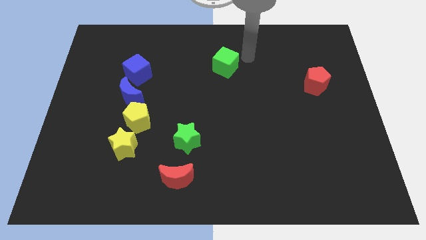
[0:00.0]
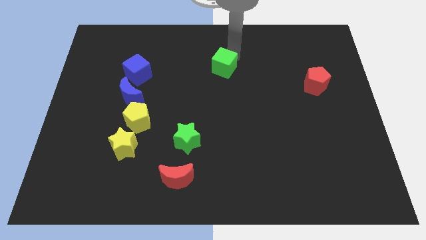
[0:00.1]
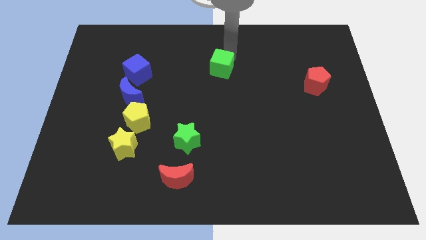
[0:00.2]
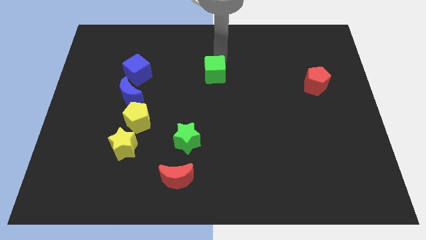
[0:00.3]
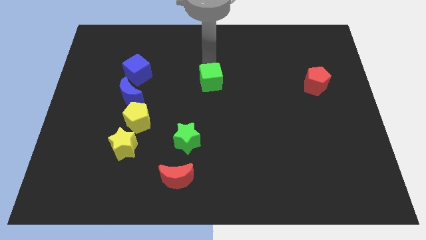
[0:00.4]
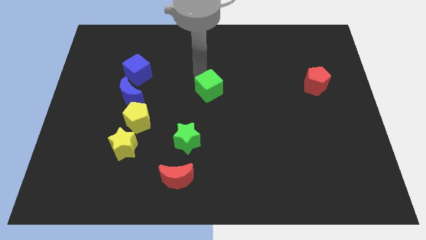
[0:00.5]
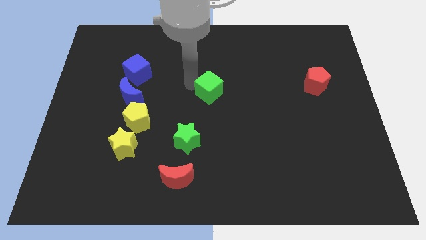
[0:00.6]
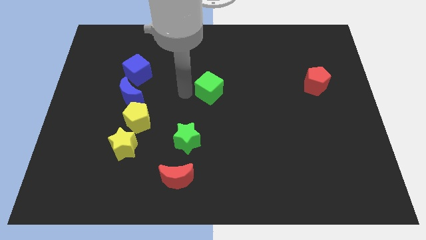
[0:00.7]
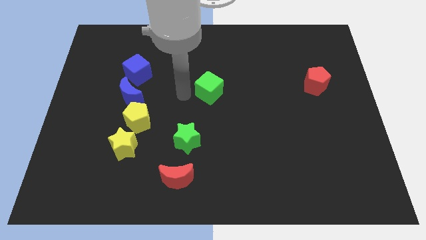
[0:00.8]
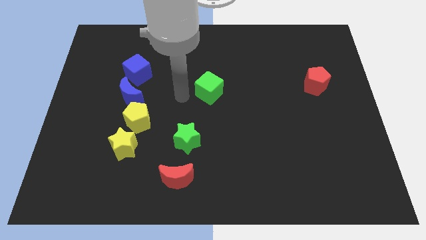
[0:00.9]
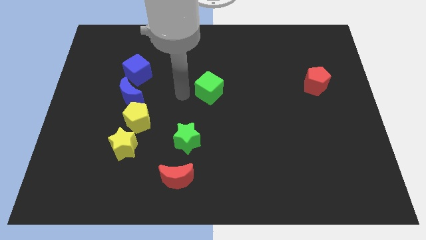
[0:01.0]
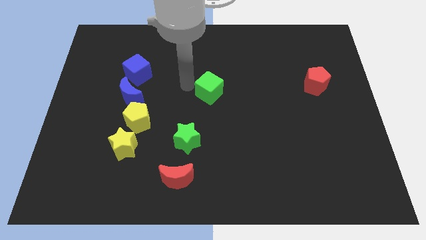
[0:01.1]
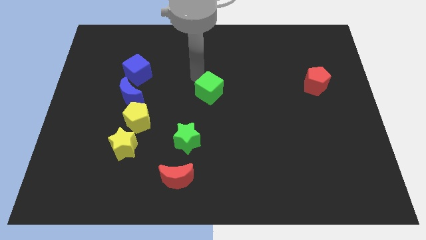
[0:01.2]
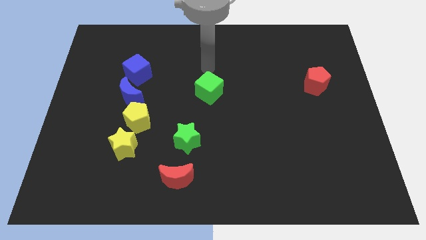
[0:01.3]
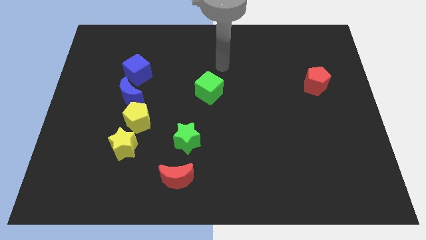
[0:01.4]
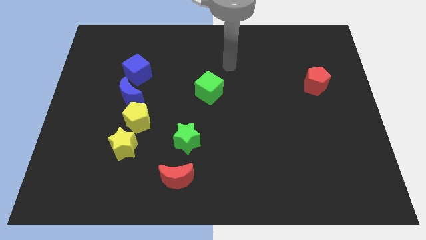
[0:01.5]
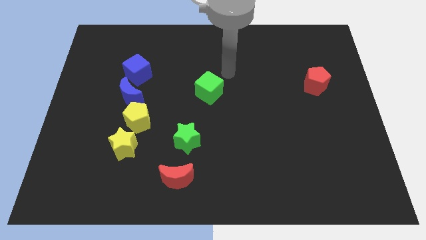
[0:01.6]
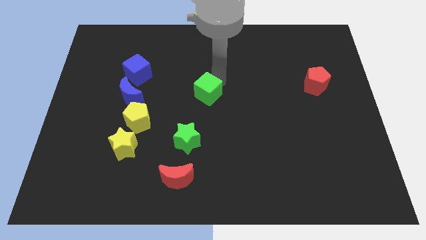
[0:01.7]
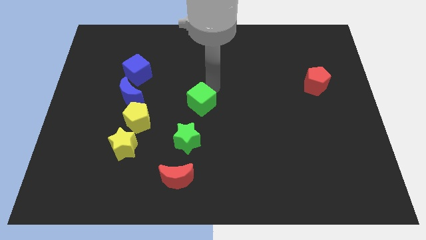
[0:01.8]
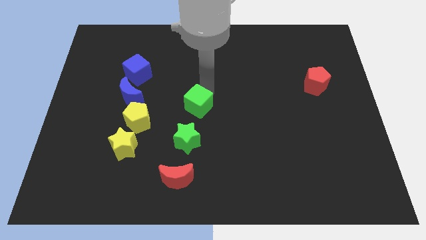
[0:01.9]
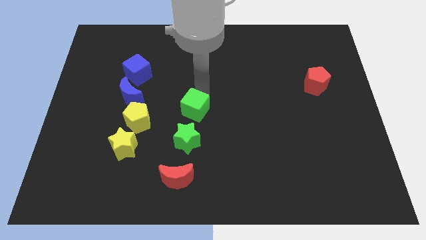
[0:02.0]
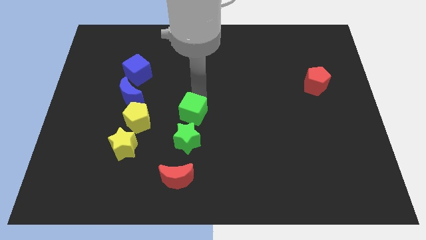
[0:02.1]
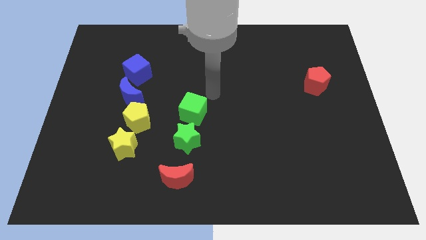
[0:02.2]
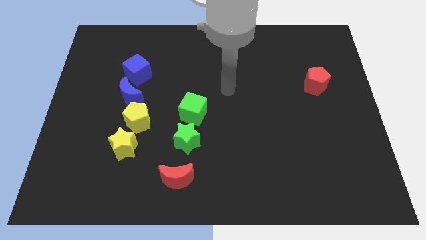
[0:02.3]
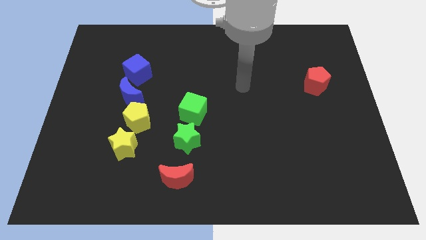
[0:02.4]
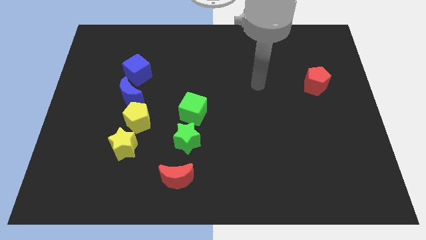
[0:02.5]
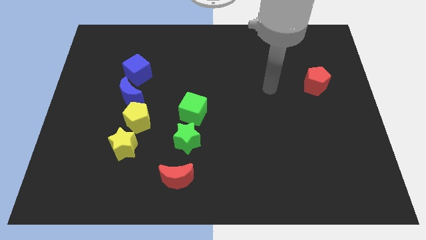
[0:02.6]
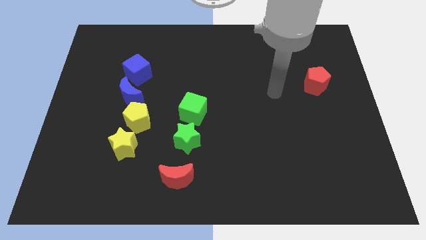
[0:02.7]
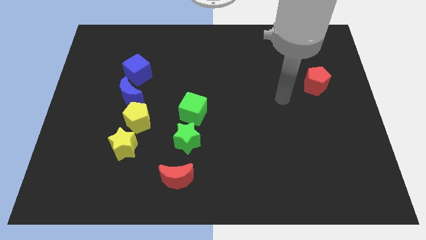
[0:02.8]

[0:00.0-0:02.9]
place the green cube above the green star

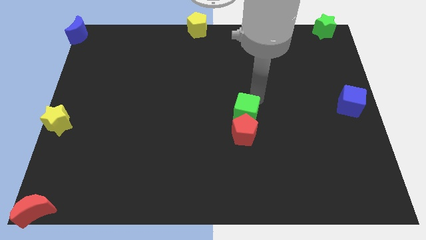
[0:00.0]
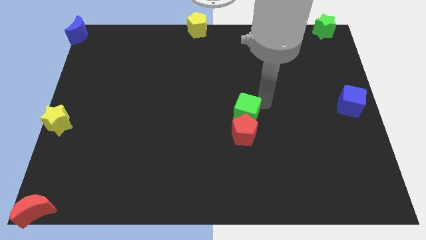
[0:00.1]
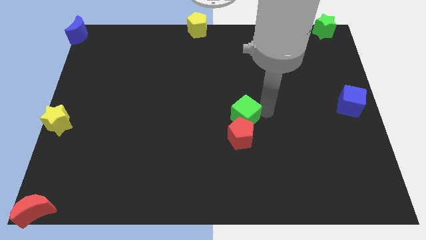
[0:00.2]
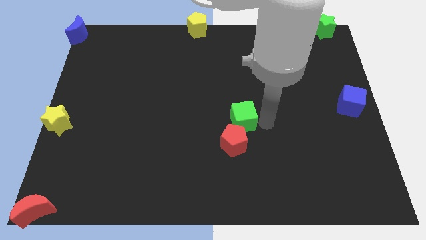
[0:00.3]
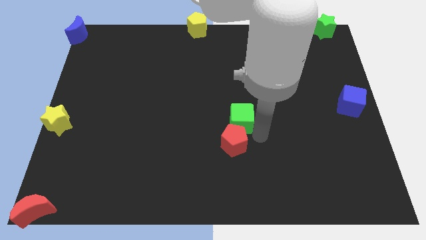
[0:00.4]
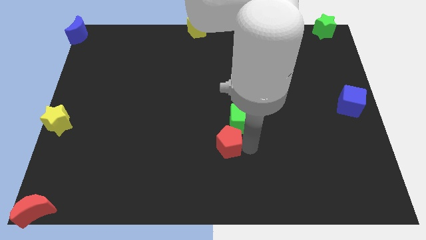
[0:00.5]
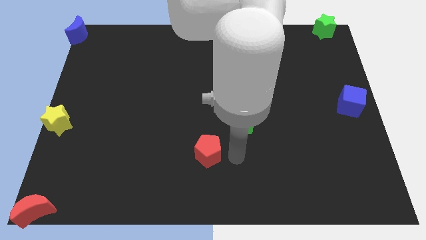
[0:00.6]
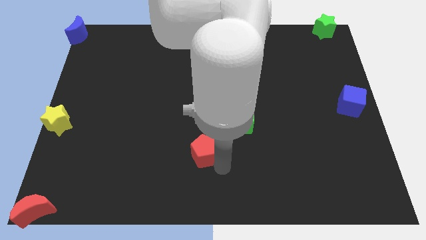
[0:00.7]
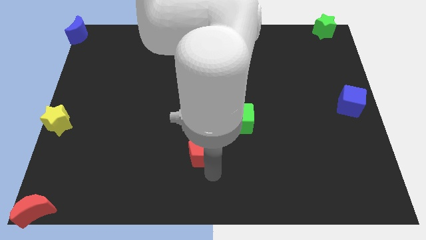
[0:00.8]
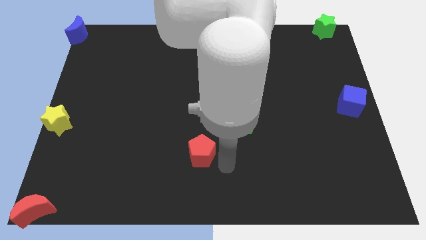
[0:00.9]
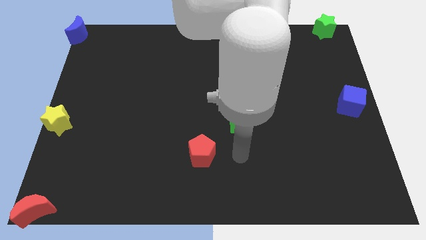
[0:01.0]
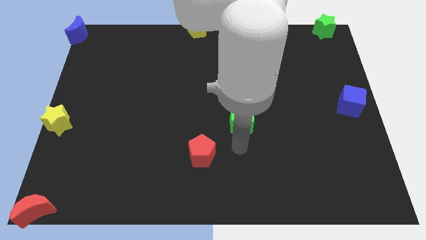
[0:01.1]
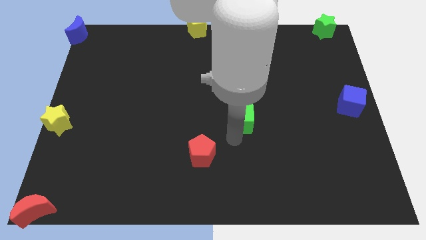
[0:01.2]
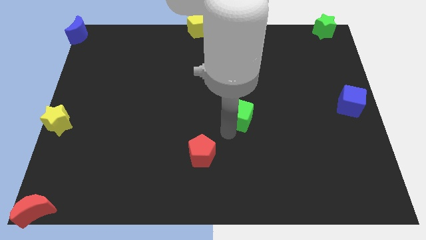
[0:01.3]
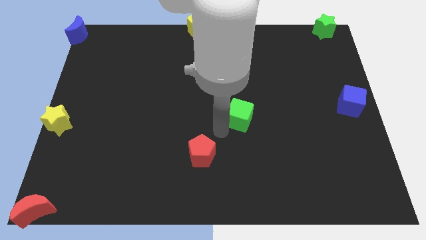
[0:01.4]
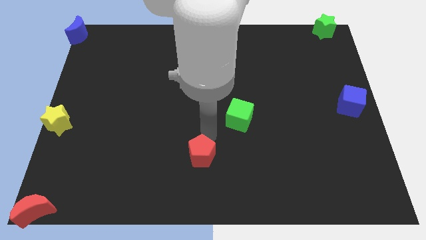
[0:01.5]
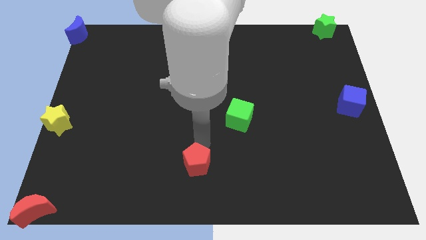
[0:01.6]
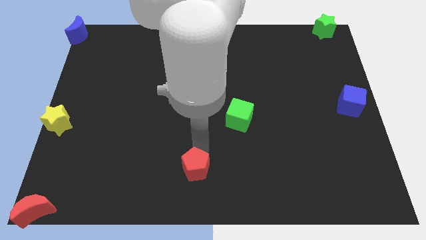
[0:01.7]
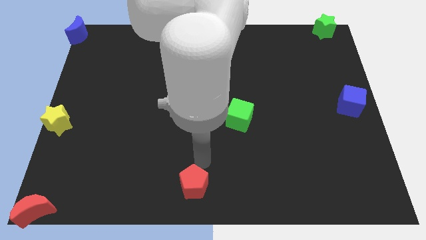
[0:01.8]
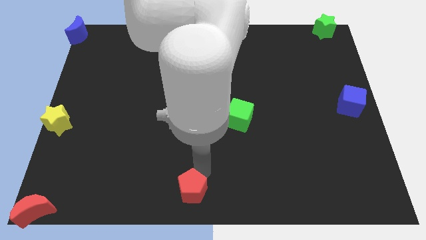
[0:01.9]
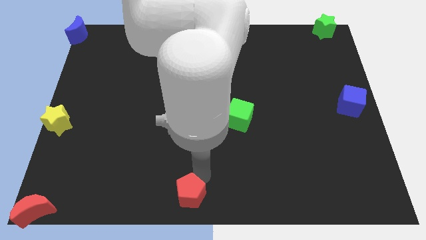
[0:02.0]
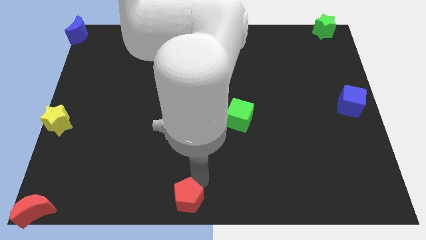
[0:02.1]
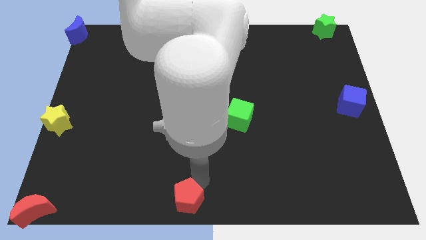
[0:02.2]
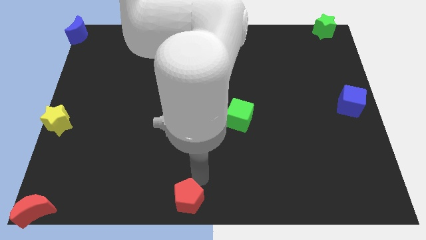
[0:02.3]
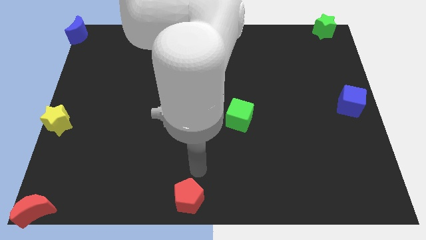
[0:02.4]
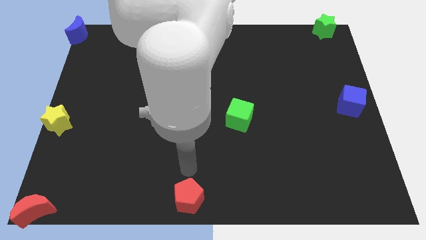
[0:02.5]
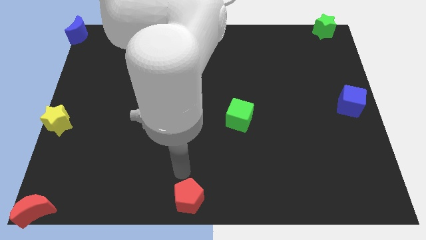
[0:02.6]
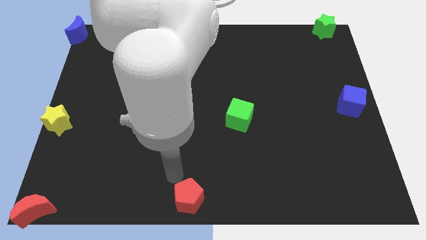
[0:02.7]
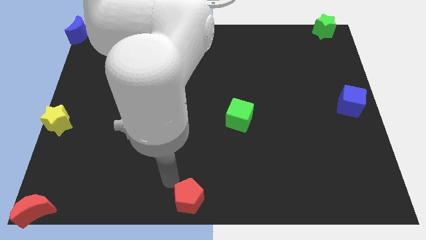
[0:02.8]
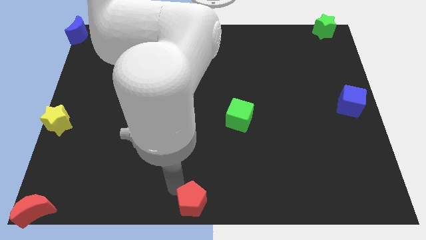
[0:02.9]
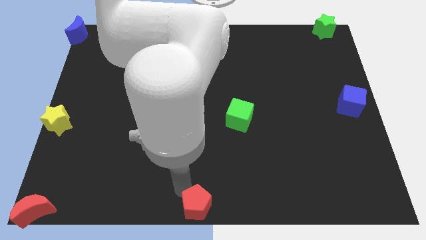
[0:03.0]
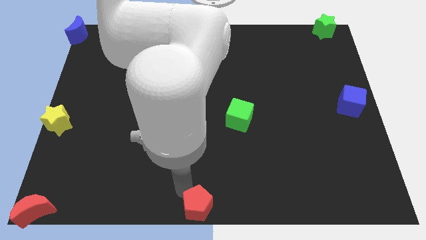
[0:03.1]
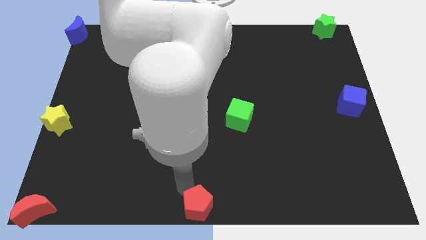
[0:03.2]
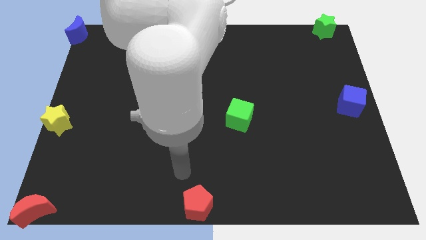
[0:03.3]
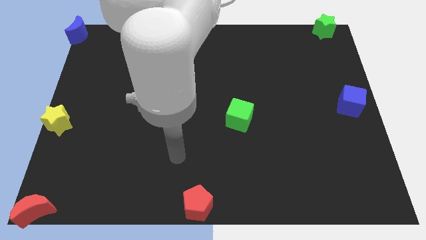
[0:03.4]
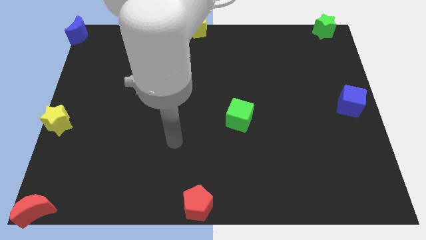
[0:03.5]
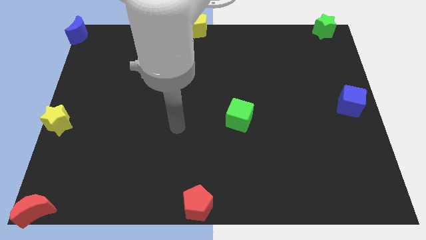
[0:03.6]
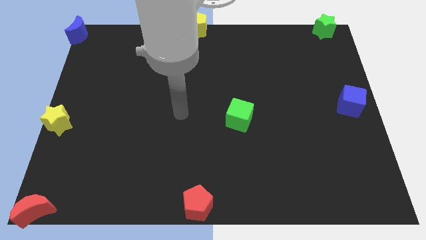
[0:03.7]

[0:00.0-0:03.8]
push the red pentagon to the bottom center

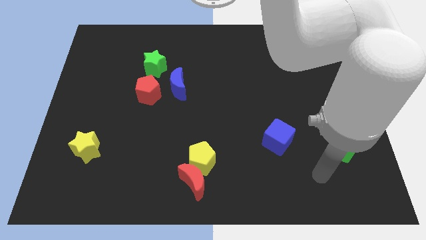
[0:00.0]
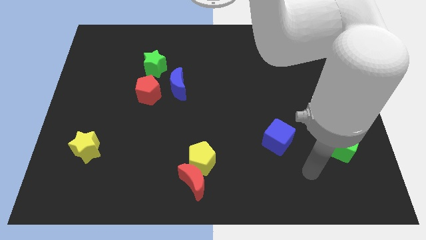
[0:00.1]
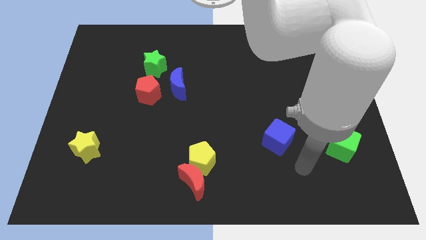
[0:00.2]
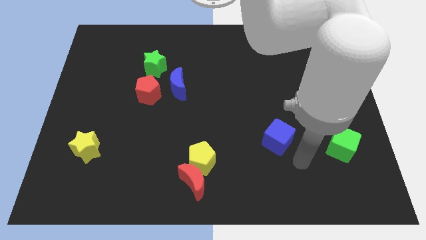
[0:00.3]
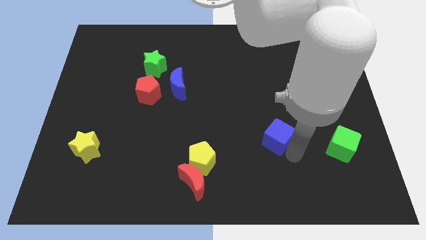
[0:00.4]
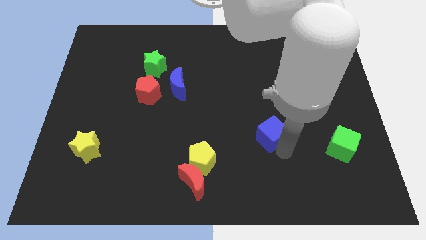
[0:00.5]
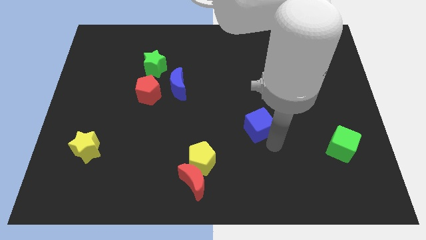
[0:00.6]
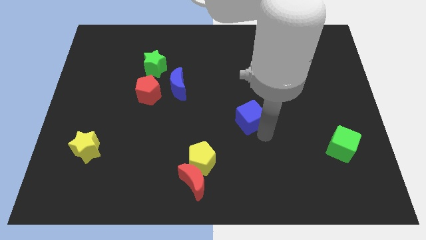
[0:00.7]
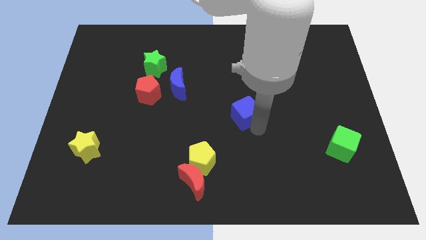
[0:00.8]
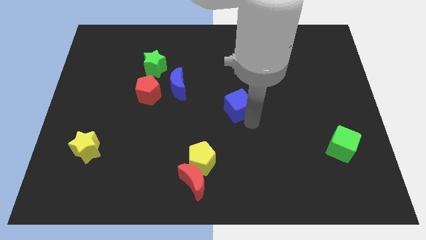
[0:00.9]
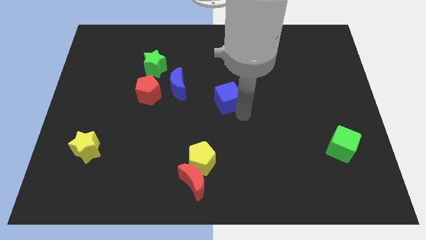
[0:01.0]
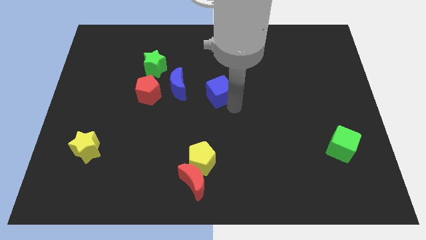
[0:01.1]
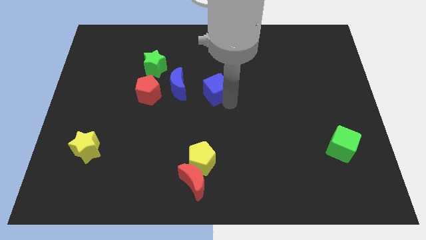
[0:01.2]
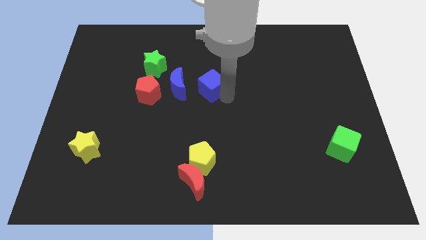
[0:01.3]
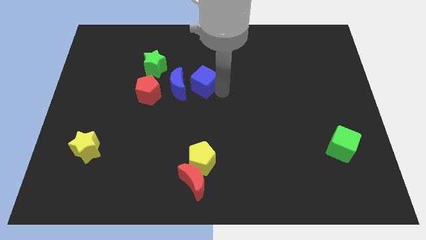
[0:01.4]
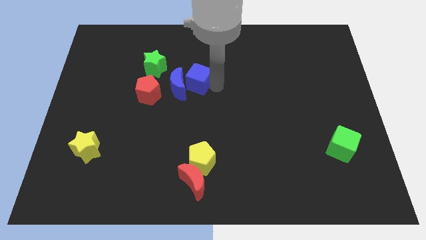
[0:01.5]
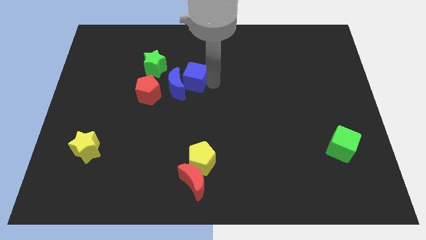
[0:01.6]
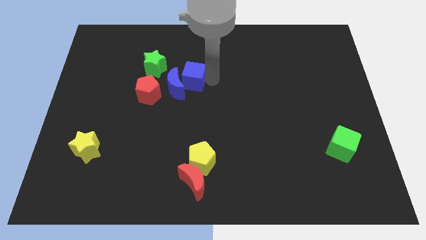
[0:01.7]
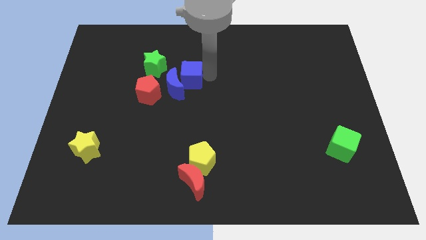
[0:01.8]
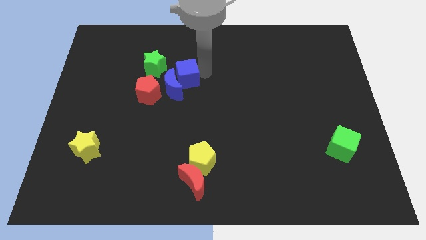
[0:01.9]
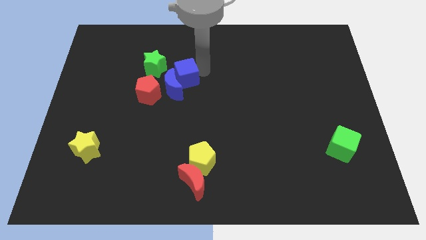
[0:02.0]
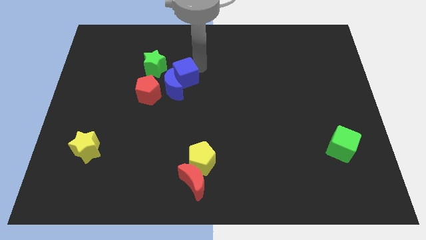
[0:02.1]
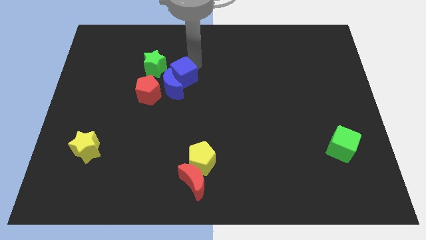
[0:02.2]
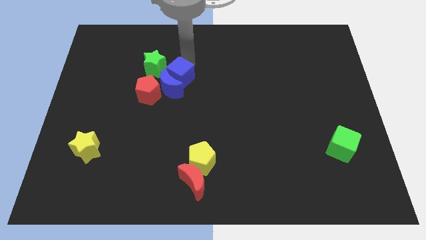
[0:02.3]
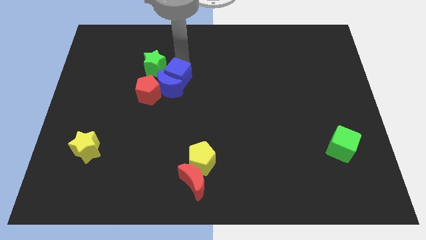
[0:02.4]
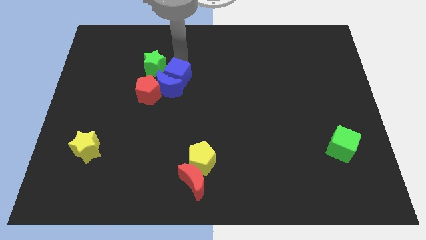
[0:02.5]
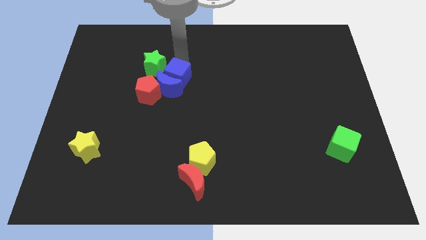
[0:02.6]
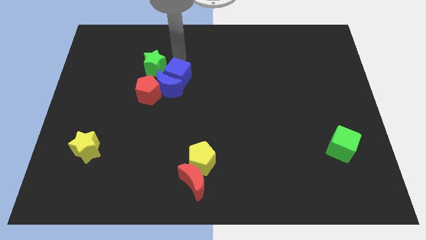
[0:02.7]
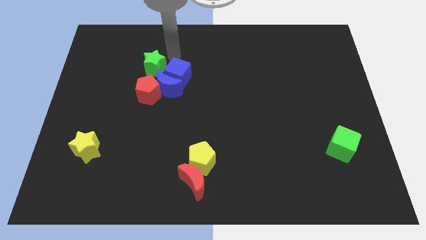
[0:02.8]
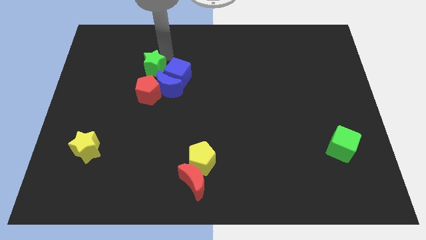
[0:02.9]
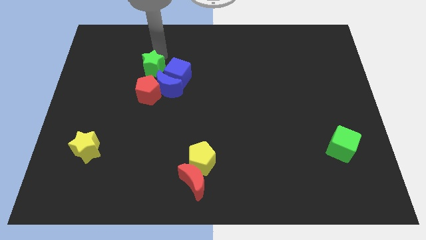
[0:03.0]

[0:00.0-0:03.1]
slide blue cube into blue moon
